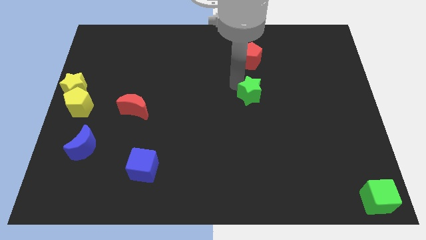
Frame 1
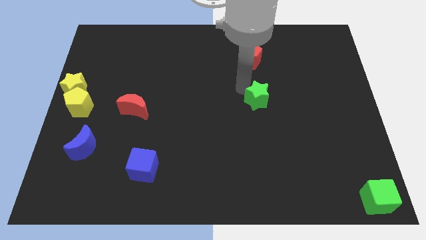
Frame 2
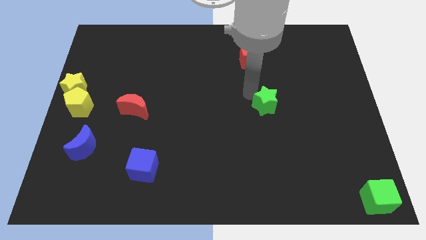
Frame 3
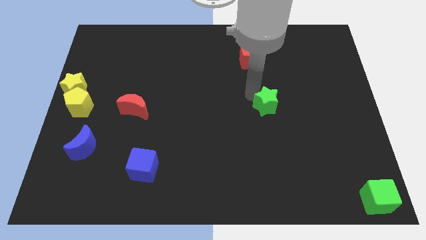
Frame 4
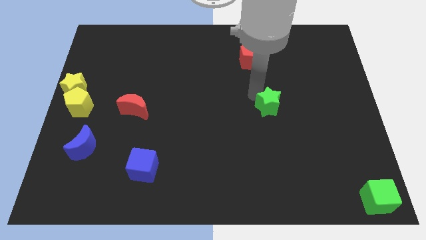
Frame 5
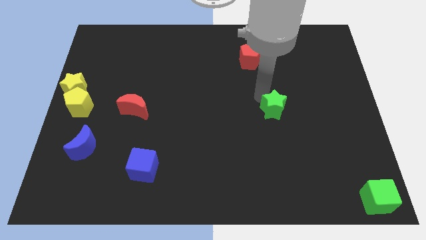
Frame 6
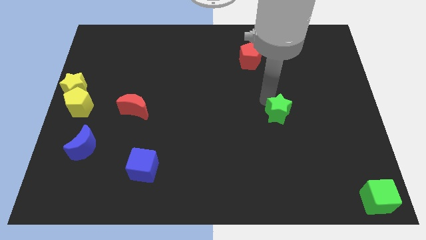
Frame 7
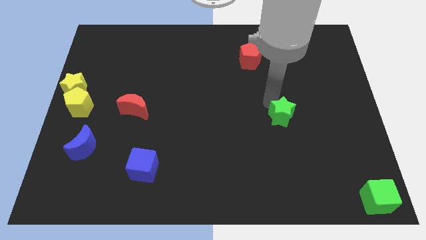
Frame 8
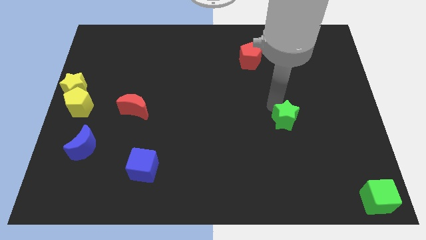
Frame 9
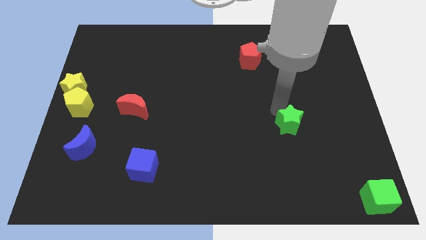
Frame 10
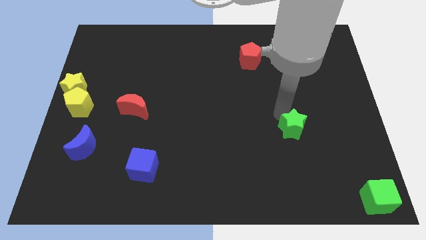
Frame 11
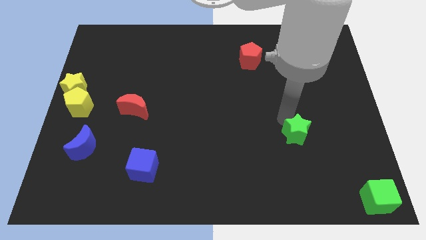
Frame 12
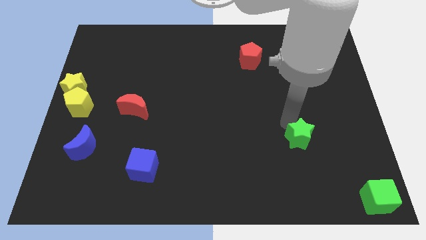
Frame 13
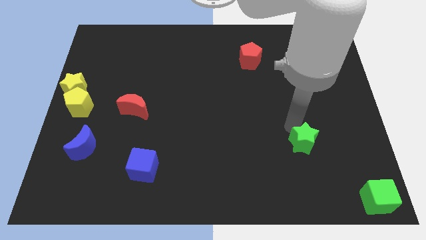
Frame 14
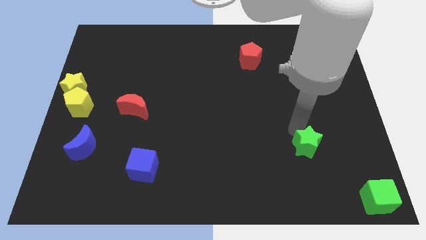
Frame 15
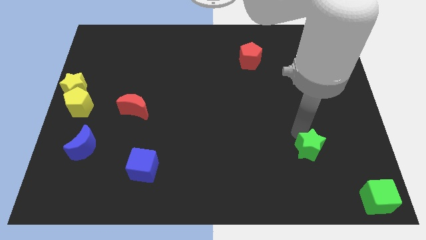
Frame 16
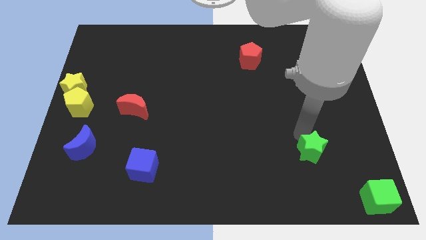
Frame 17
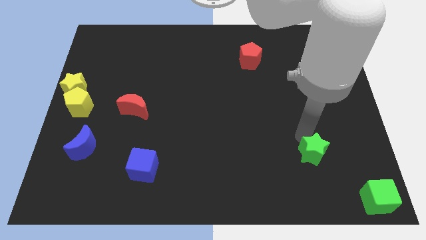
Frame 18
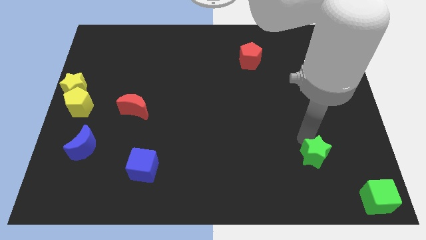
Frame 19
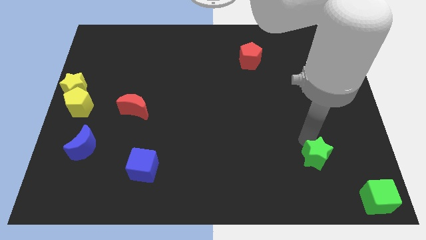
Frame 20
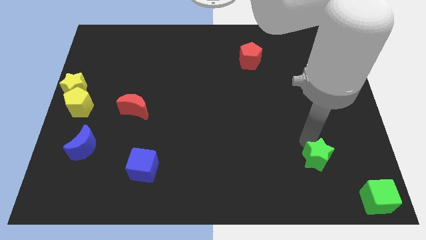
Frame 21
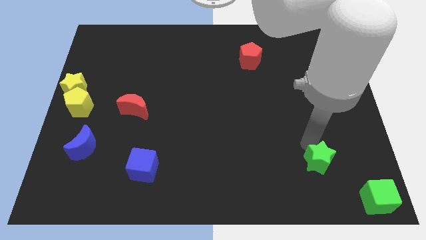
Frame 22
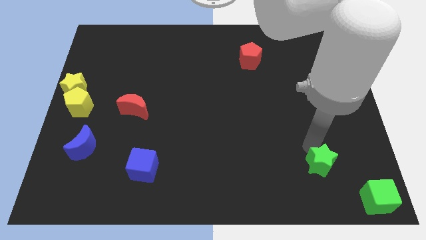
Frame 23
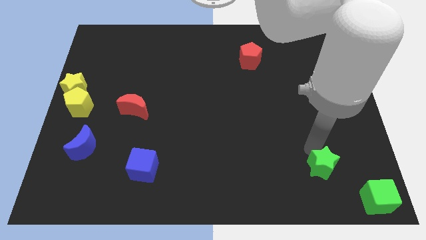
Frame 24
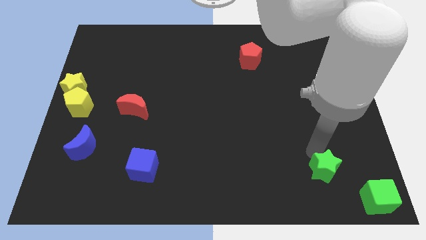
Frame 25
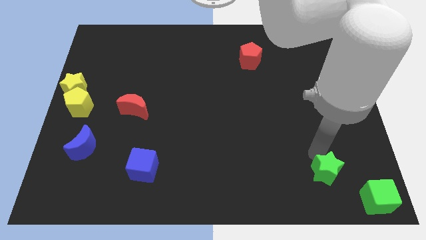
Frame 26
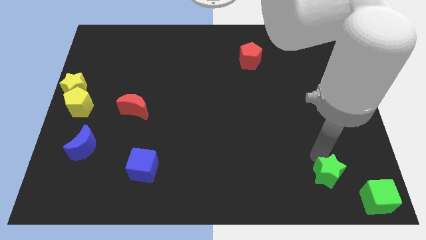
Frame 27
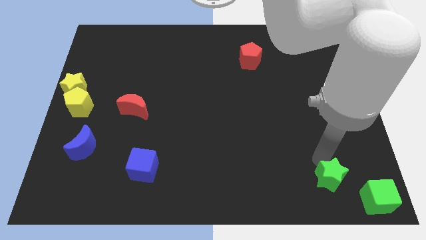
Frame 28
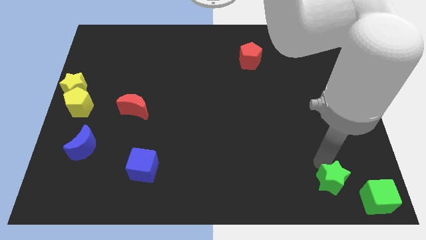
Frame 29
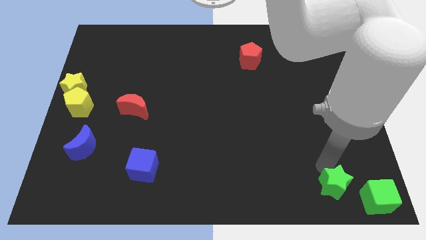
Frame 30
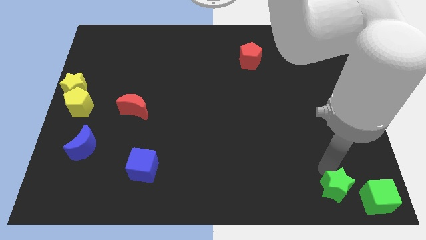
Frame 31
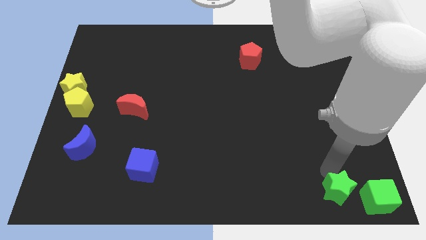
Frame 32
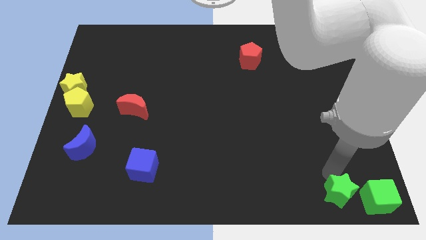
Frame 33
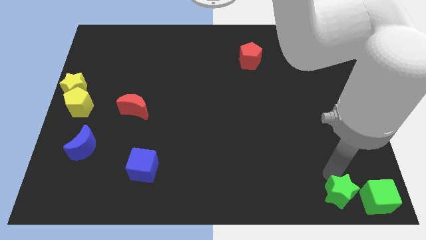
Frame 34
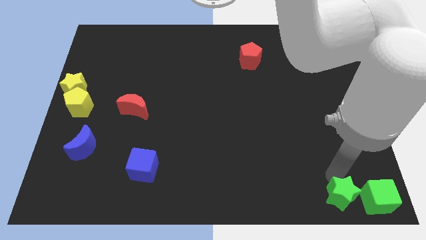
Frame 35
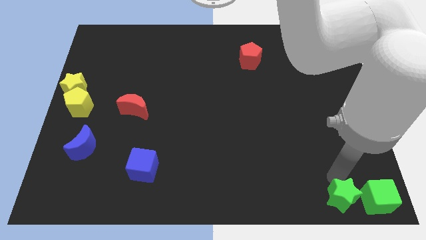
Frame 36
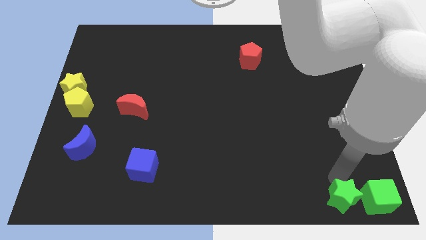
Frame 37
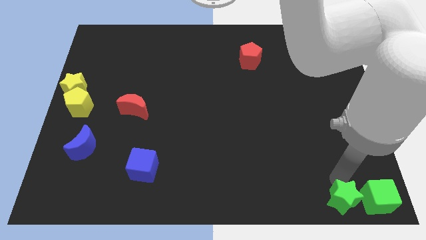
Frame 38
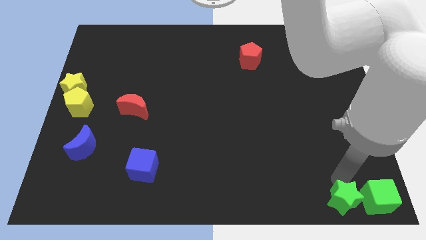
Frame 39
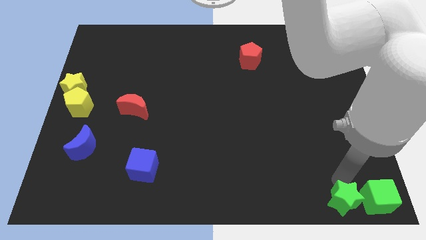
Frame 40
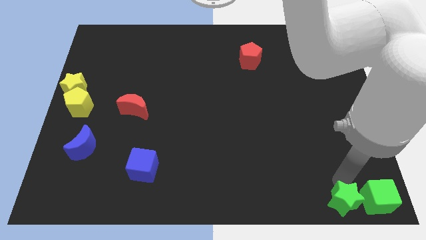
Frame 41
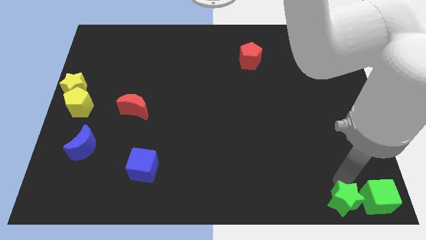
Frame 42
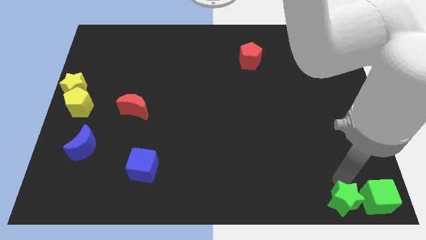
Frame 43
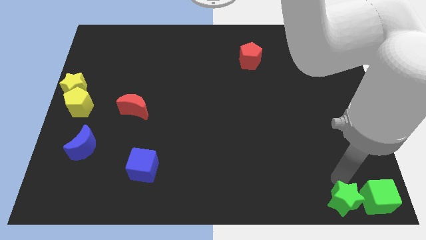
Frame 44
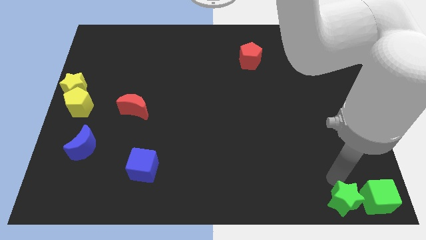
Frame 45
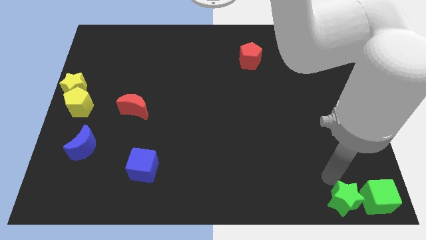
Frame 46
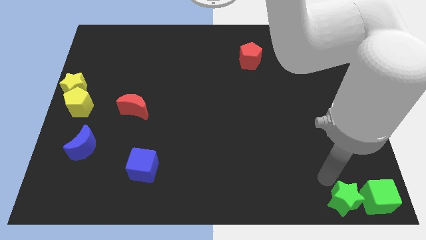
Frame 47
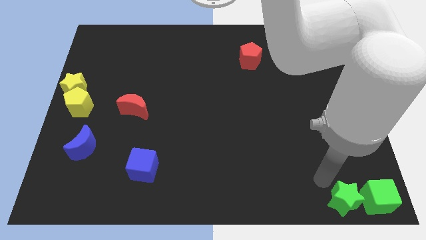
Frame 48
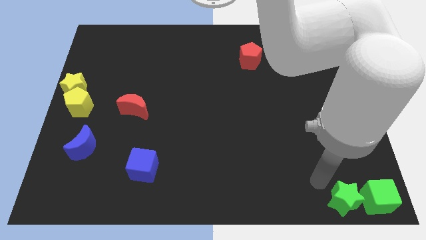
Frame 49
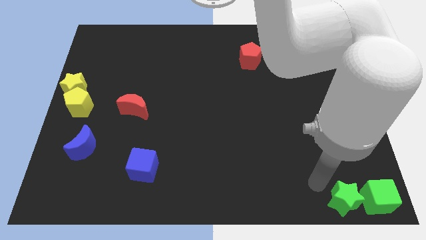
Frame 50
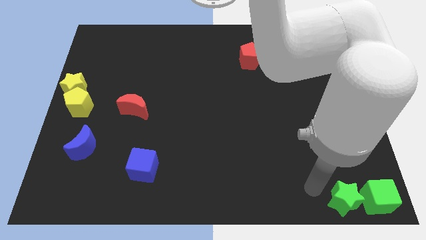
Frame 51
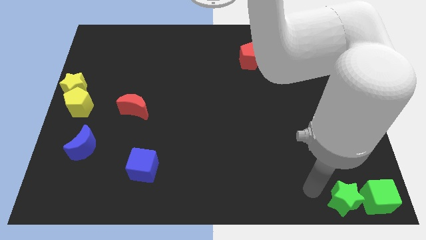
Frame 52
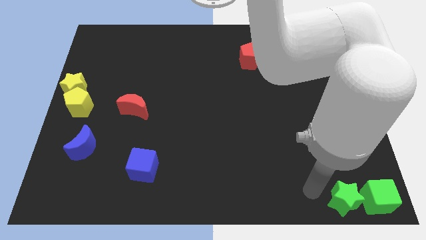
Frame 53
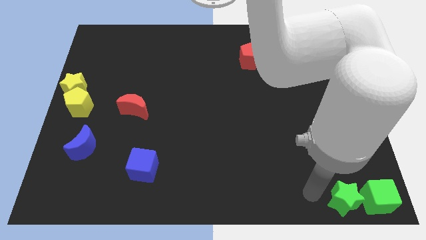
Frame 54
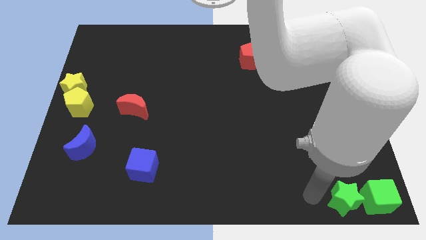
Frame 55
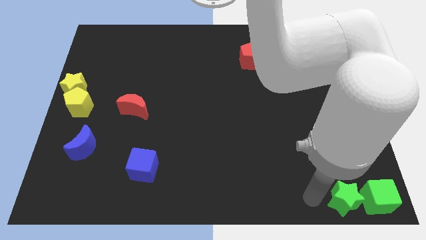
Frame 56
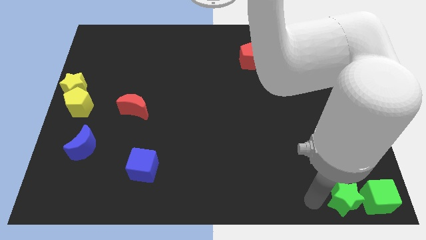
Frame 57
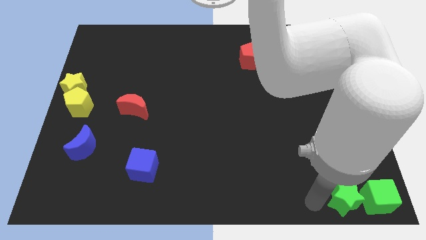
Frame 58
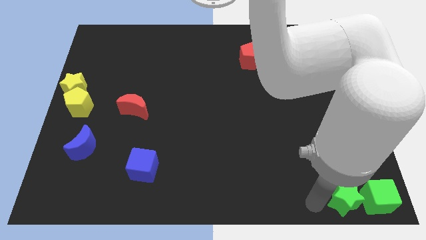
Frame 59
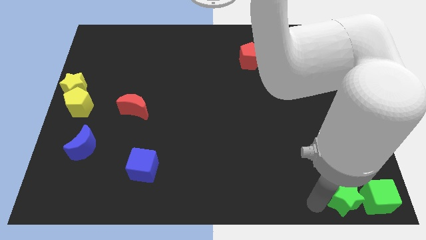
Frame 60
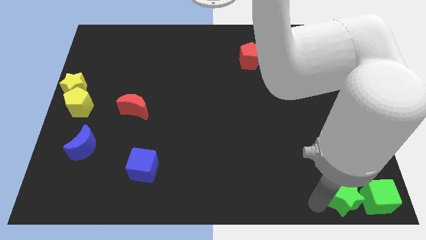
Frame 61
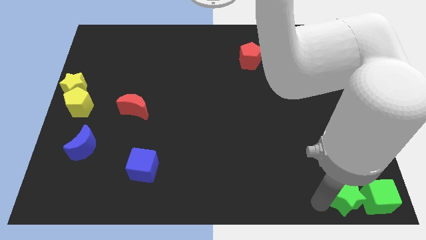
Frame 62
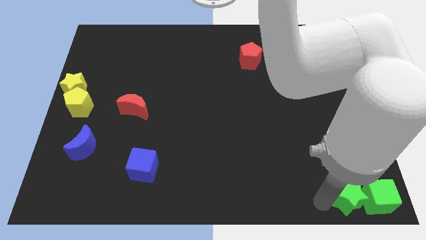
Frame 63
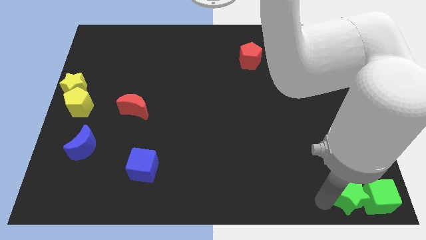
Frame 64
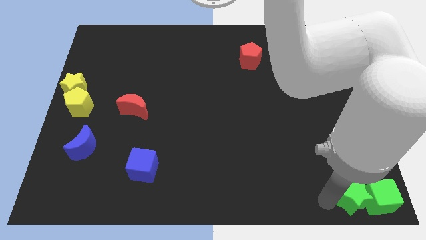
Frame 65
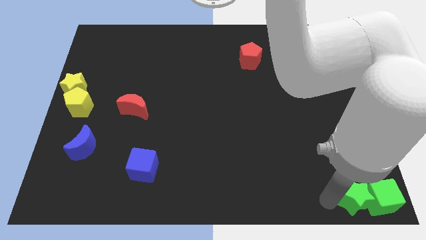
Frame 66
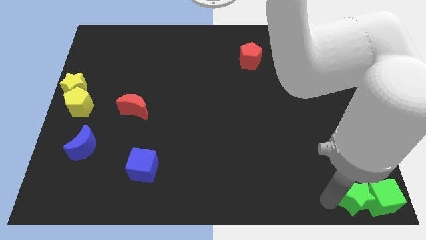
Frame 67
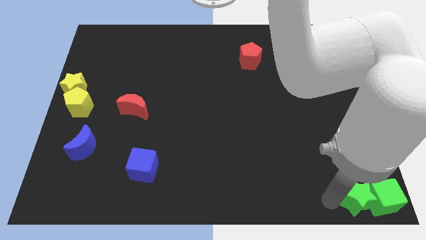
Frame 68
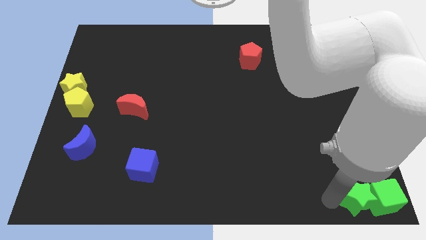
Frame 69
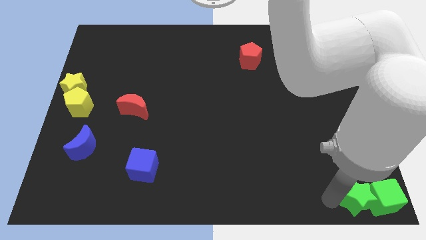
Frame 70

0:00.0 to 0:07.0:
place the green star into the green cube

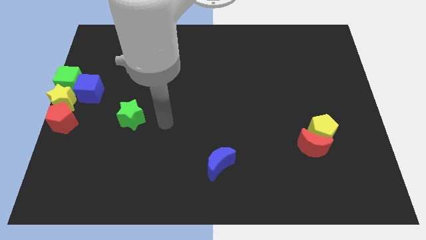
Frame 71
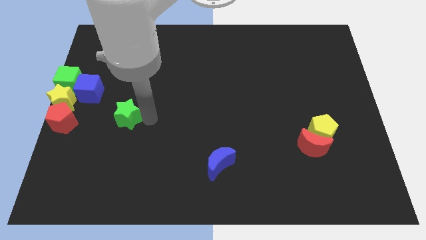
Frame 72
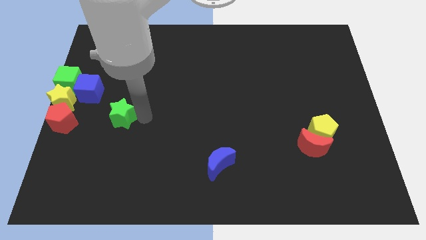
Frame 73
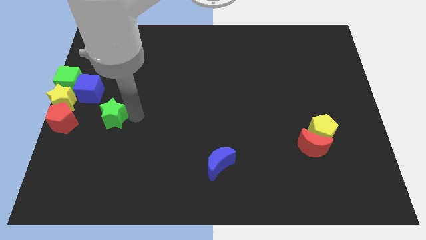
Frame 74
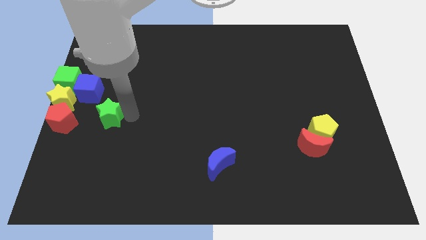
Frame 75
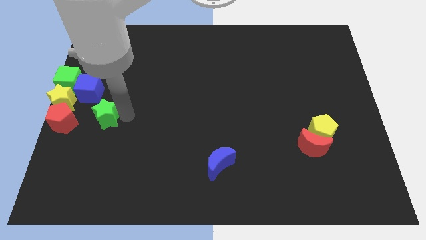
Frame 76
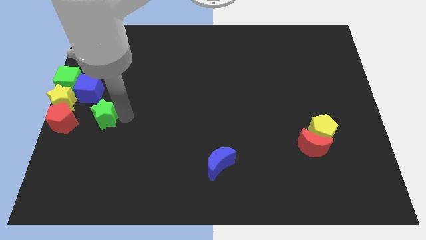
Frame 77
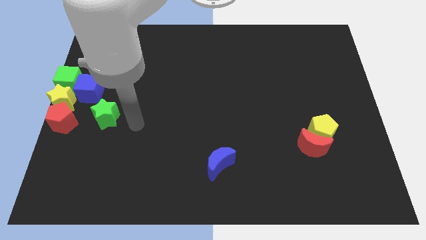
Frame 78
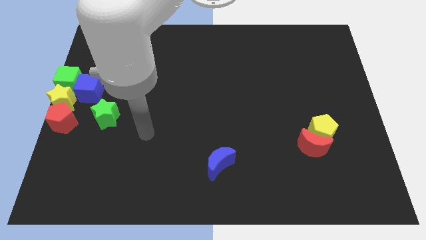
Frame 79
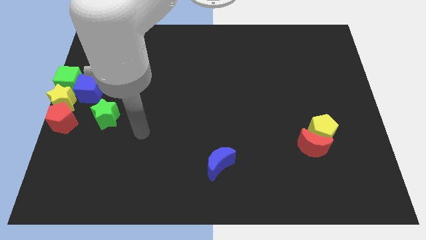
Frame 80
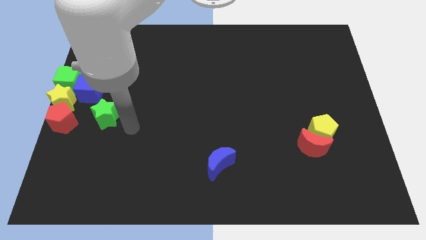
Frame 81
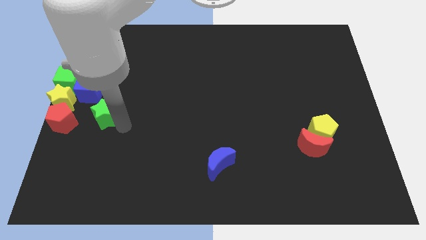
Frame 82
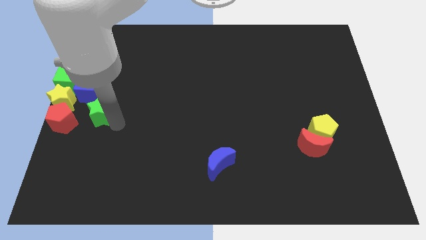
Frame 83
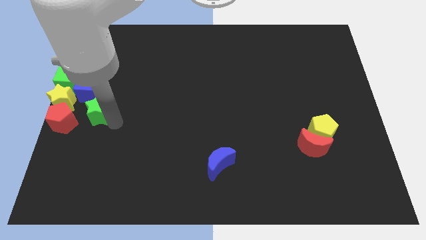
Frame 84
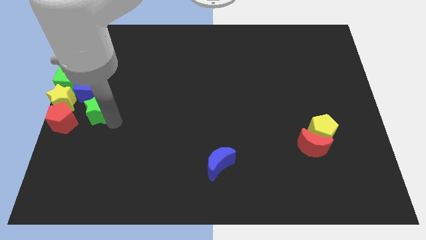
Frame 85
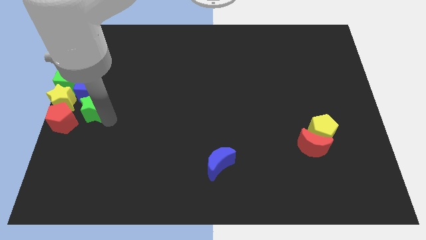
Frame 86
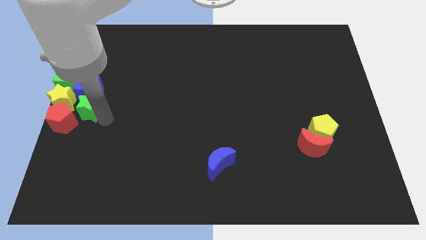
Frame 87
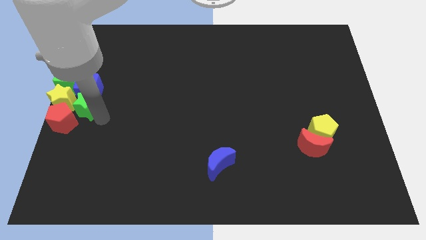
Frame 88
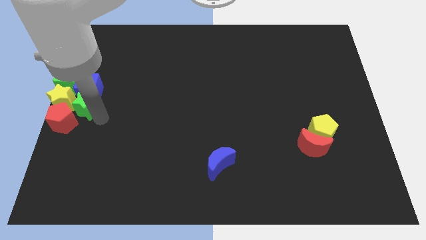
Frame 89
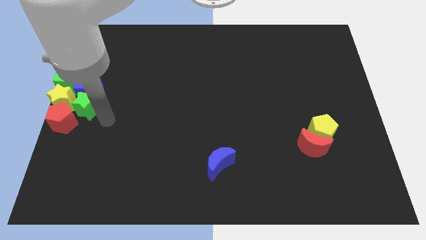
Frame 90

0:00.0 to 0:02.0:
push the green star into the yellow star
